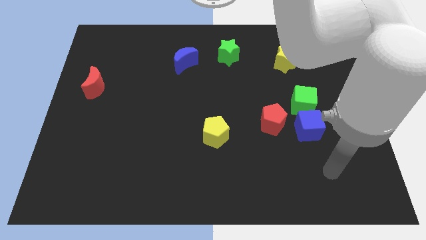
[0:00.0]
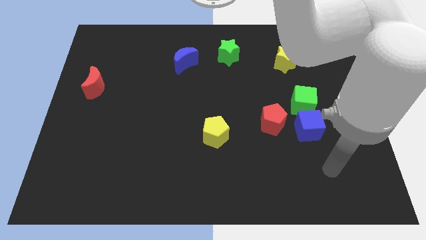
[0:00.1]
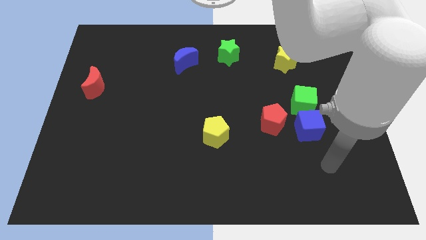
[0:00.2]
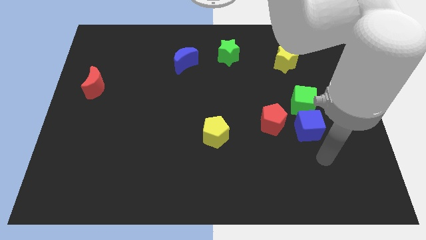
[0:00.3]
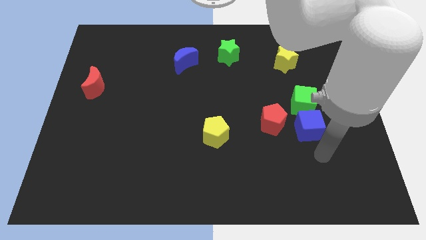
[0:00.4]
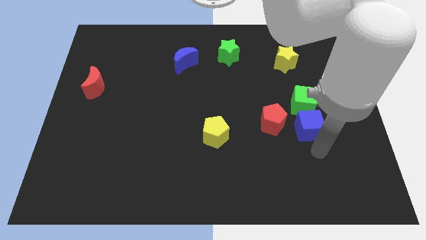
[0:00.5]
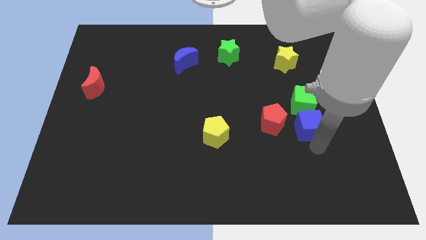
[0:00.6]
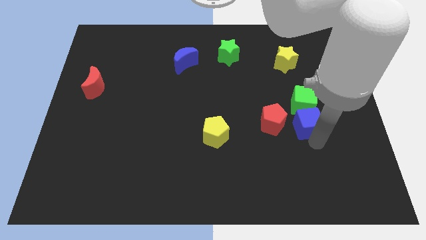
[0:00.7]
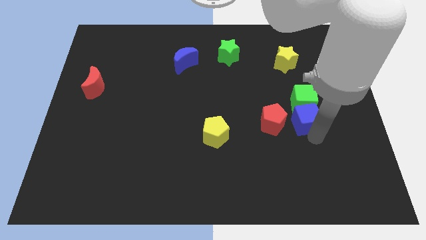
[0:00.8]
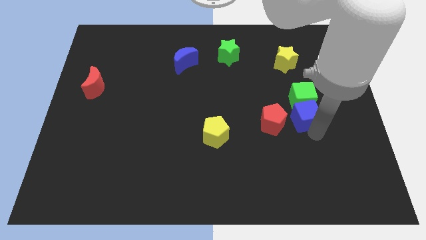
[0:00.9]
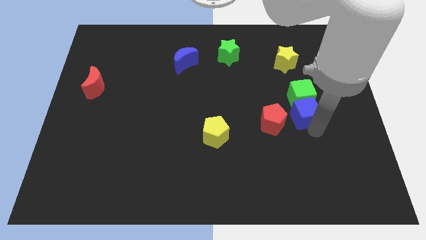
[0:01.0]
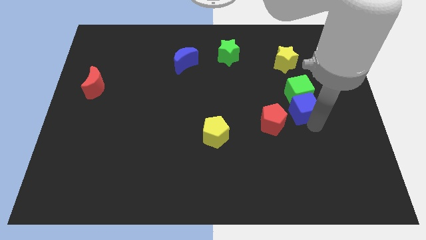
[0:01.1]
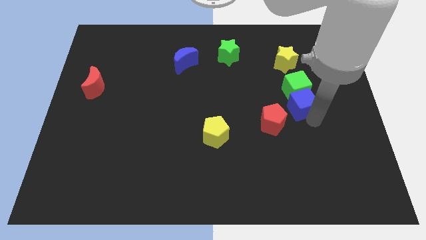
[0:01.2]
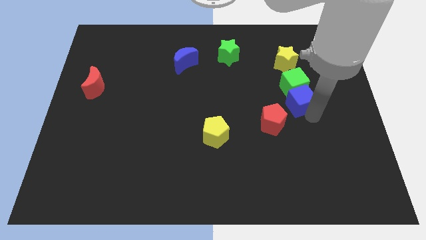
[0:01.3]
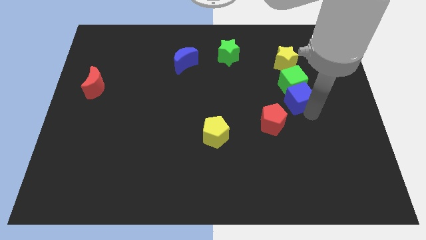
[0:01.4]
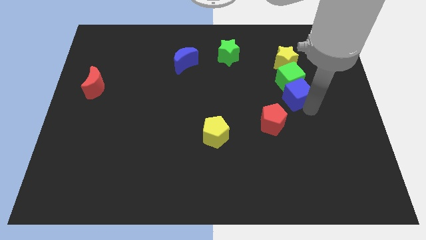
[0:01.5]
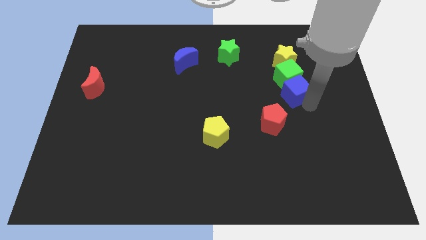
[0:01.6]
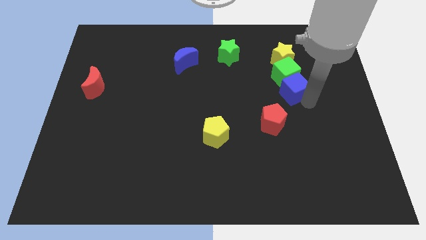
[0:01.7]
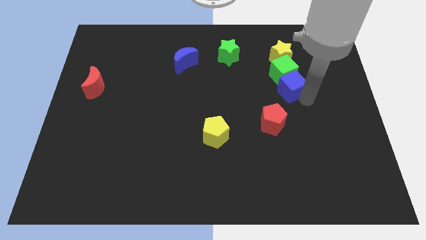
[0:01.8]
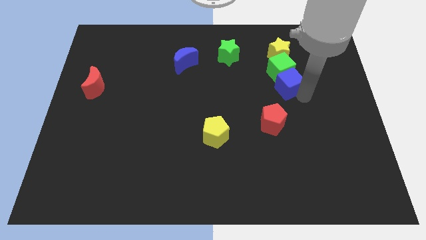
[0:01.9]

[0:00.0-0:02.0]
push the cubes into the yellow star

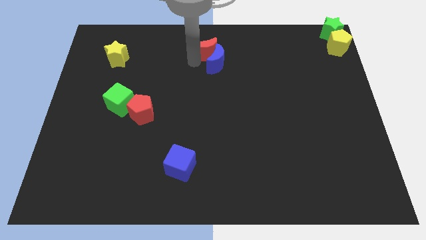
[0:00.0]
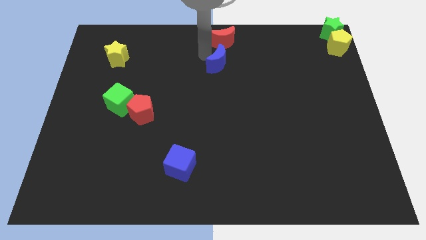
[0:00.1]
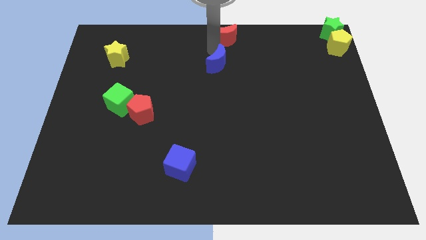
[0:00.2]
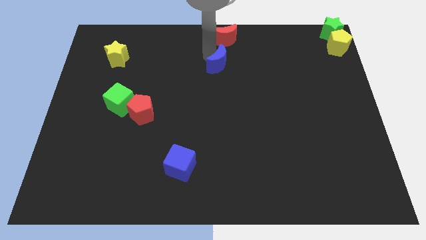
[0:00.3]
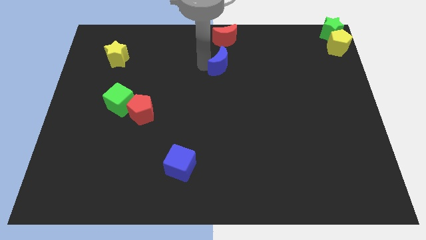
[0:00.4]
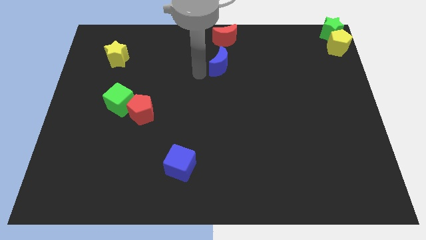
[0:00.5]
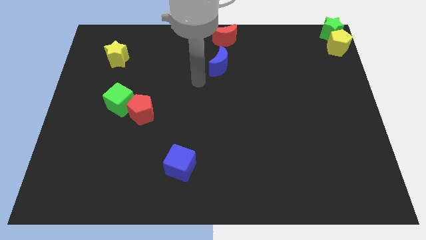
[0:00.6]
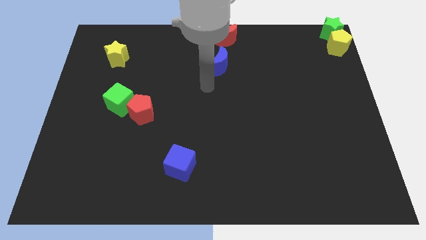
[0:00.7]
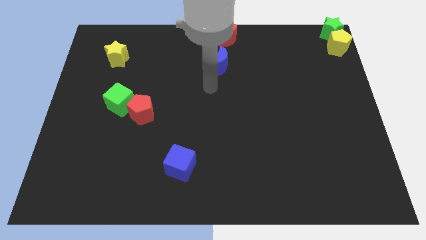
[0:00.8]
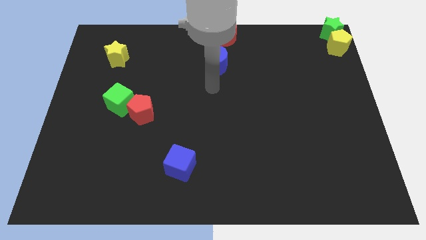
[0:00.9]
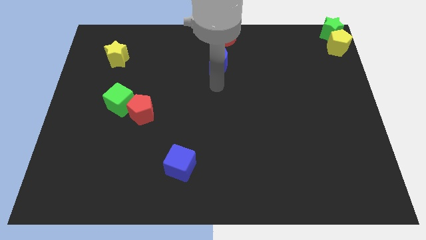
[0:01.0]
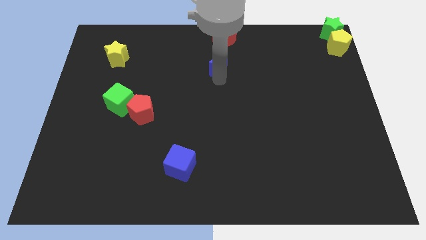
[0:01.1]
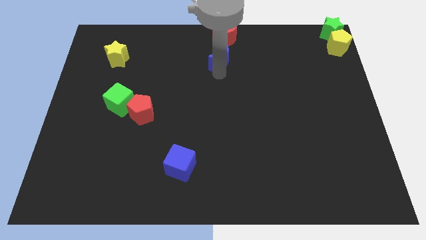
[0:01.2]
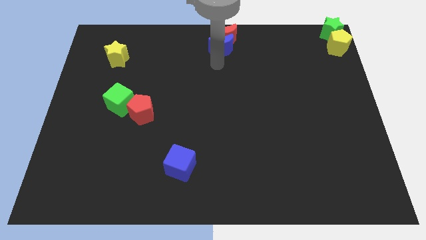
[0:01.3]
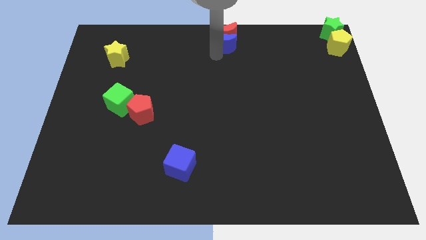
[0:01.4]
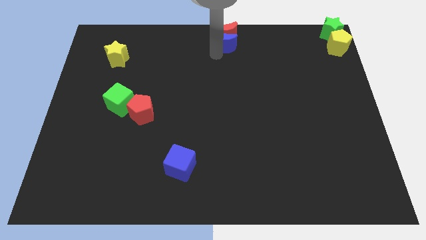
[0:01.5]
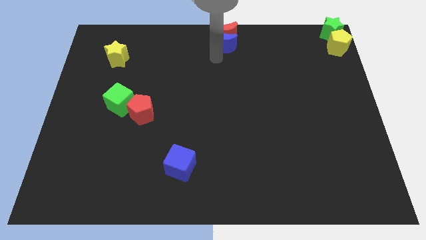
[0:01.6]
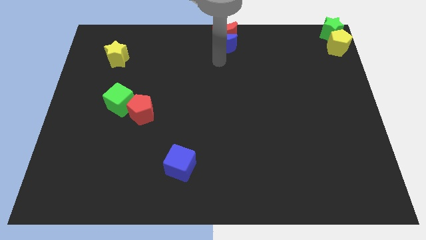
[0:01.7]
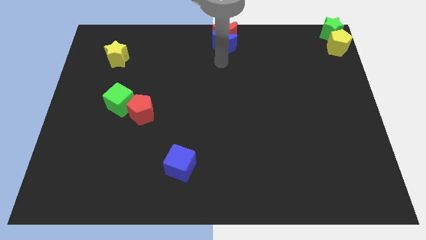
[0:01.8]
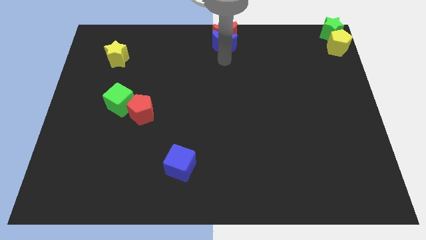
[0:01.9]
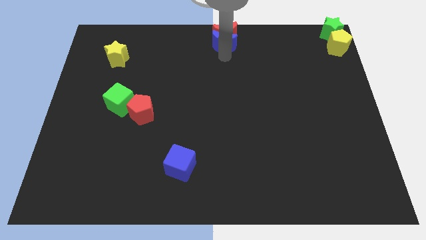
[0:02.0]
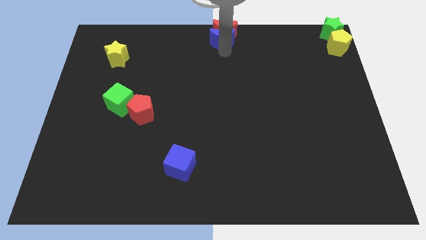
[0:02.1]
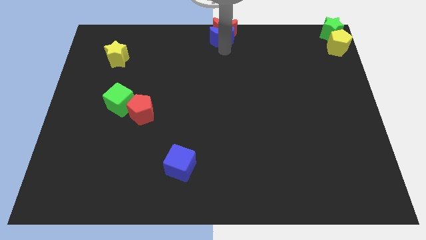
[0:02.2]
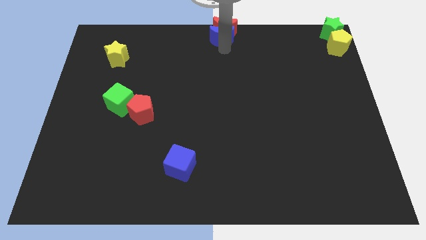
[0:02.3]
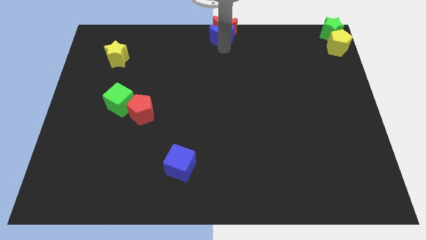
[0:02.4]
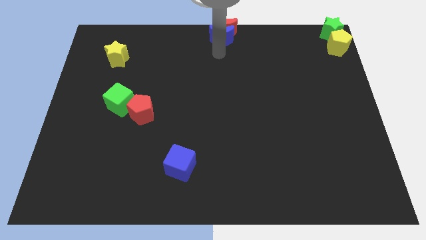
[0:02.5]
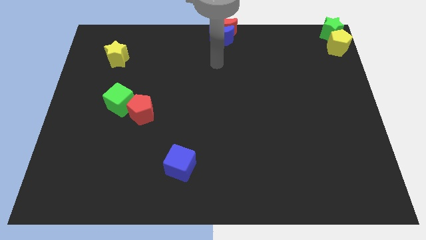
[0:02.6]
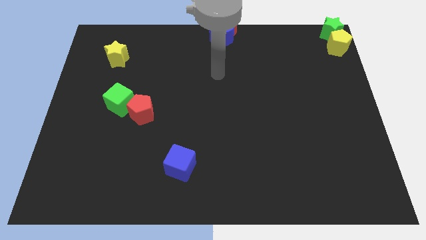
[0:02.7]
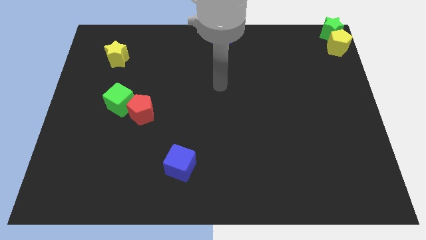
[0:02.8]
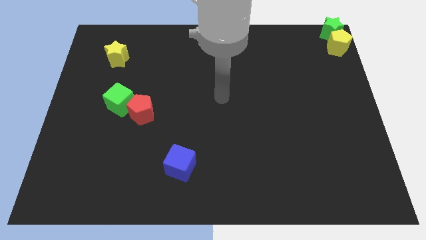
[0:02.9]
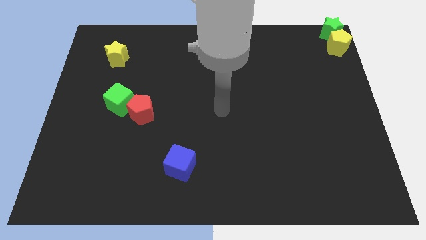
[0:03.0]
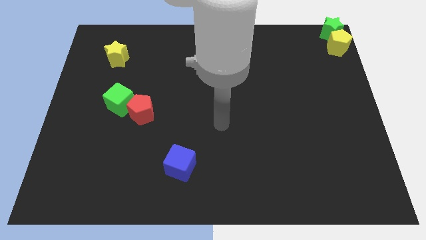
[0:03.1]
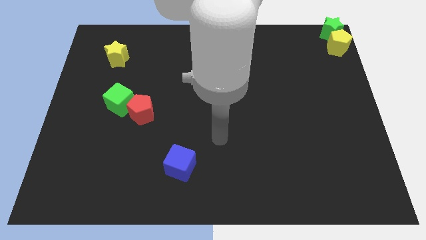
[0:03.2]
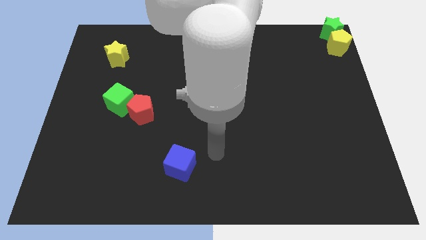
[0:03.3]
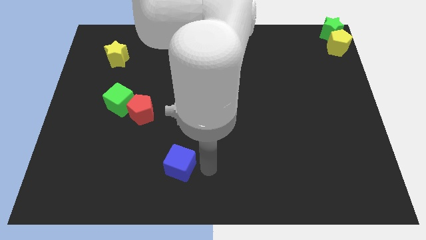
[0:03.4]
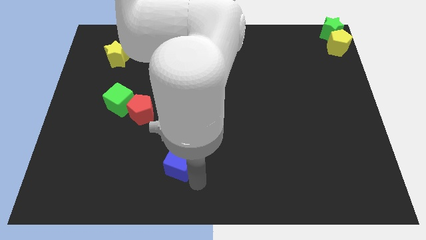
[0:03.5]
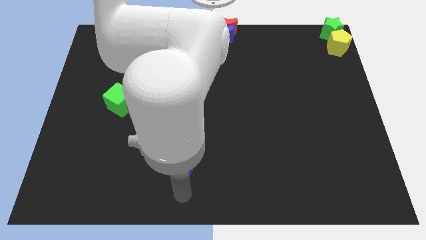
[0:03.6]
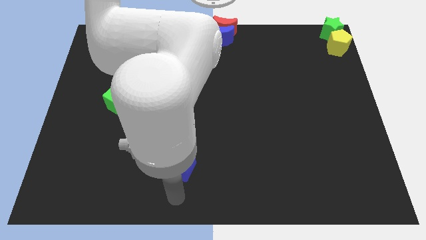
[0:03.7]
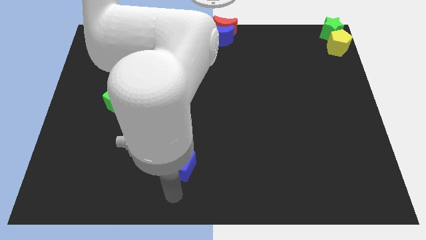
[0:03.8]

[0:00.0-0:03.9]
move the blue crescent below the red crescent

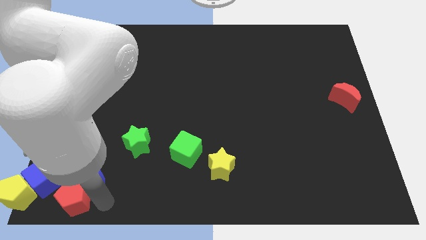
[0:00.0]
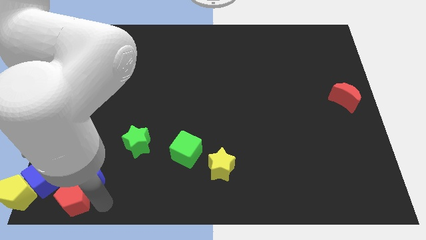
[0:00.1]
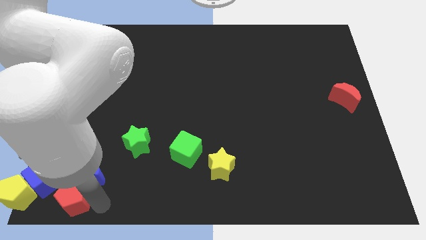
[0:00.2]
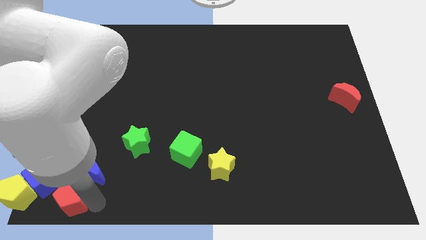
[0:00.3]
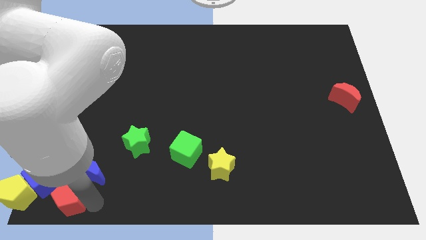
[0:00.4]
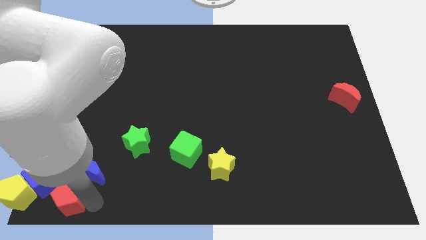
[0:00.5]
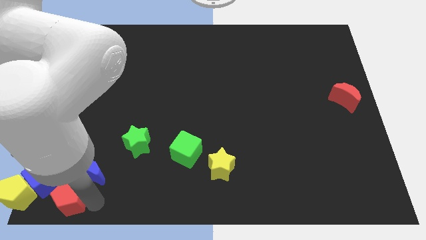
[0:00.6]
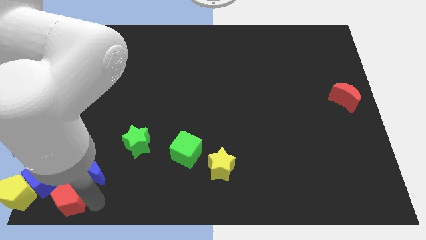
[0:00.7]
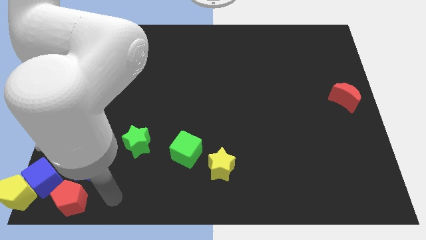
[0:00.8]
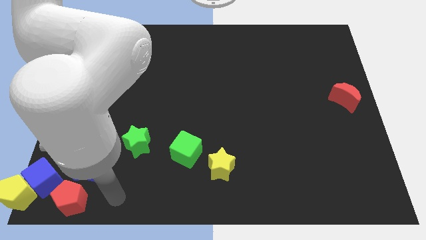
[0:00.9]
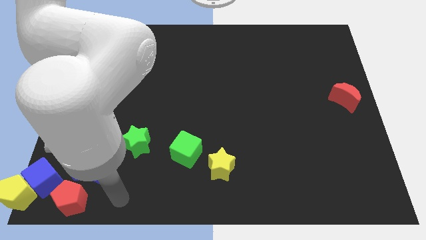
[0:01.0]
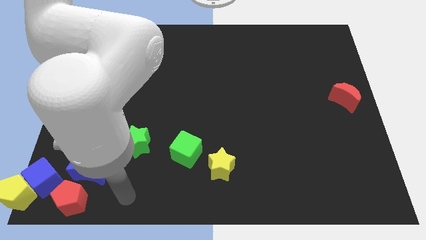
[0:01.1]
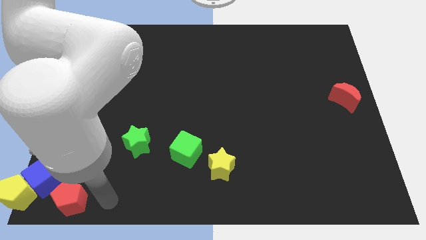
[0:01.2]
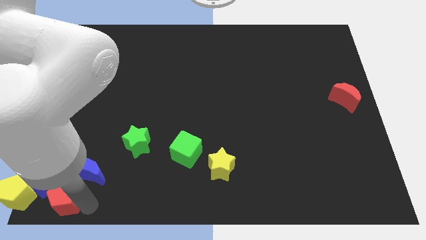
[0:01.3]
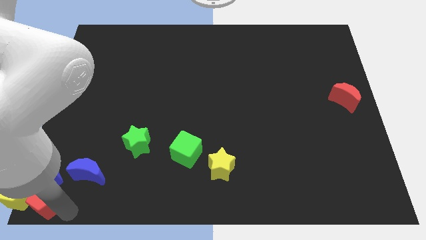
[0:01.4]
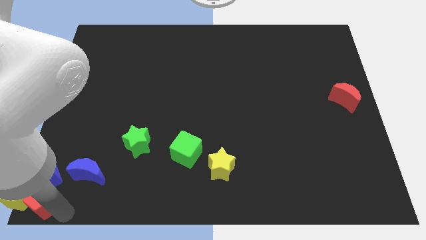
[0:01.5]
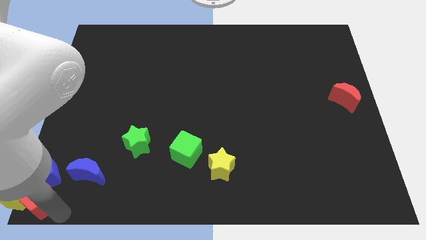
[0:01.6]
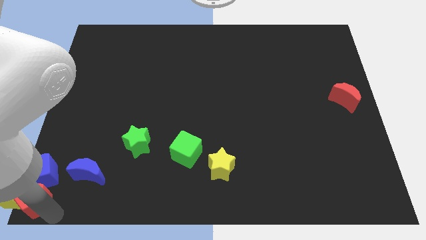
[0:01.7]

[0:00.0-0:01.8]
move the yellow pentagon with the red pentagon to the bottom left corner of the board

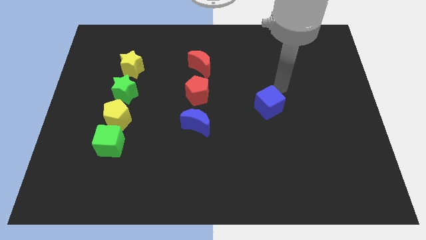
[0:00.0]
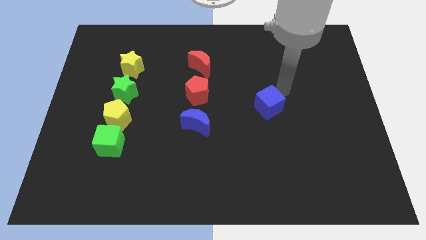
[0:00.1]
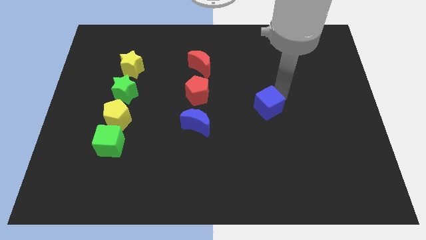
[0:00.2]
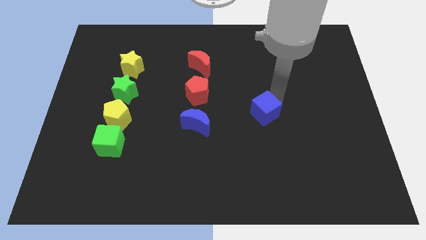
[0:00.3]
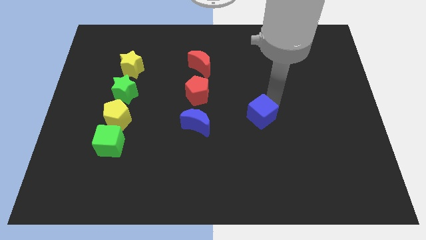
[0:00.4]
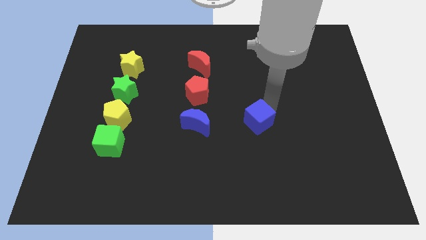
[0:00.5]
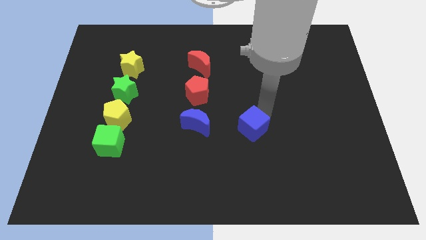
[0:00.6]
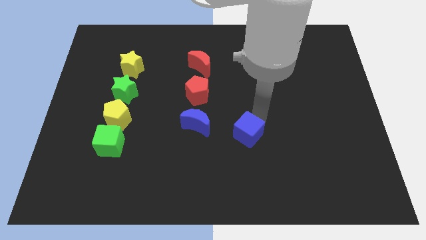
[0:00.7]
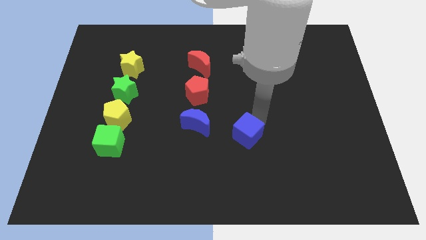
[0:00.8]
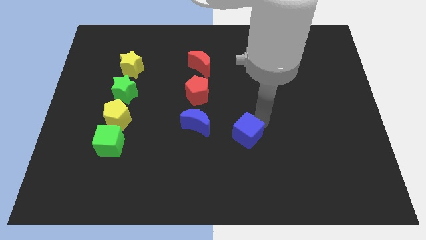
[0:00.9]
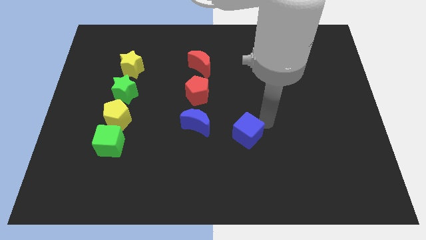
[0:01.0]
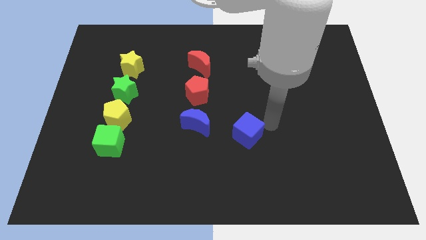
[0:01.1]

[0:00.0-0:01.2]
move the blue cube to the right of the blue crescent

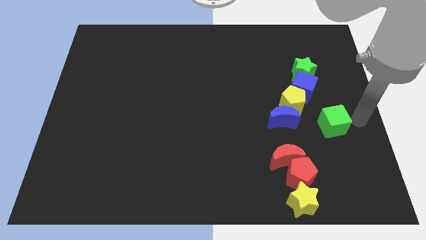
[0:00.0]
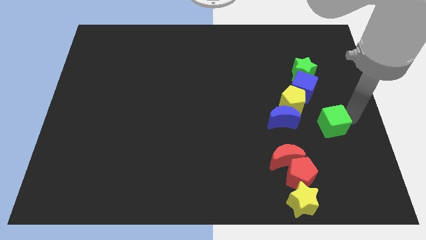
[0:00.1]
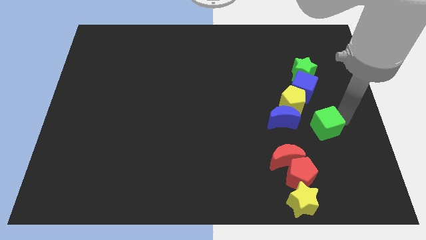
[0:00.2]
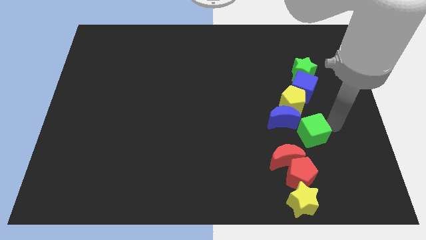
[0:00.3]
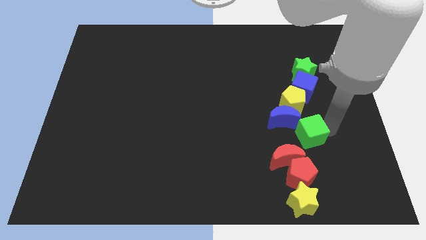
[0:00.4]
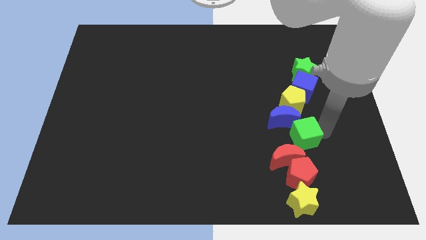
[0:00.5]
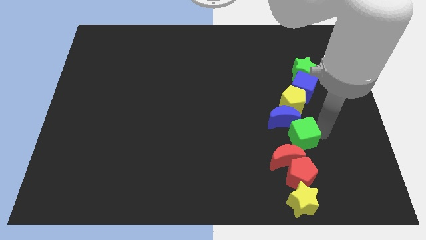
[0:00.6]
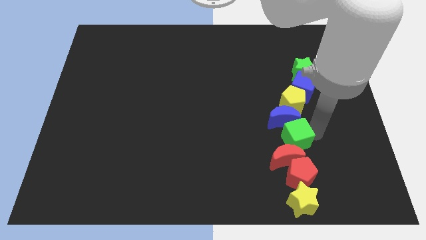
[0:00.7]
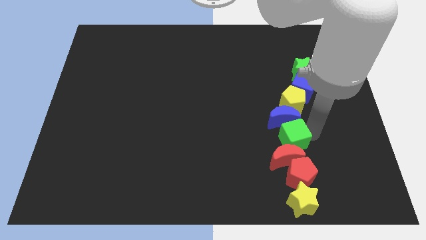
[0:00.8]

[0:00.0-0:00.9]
push the green cube towards left
